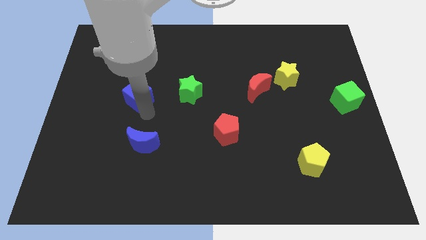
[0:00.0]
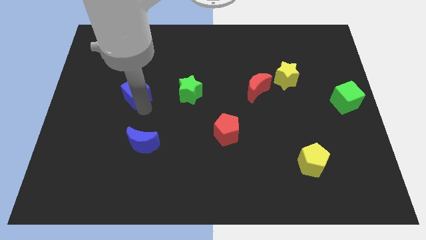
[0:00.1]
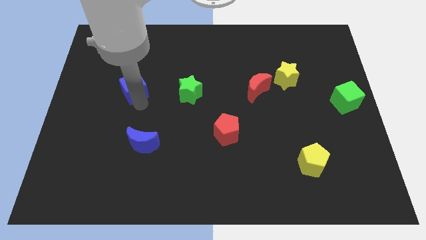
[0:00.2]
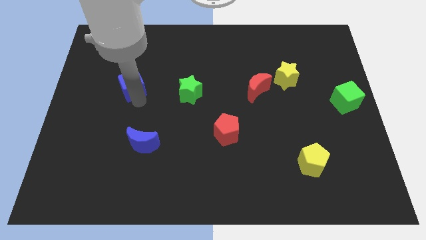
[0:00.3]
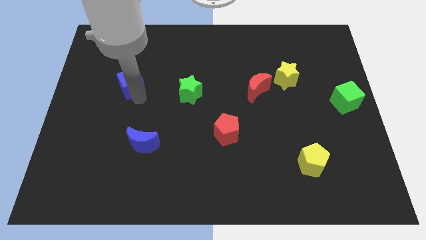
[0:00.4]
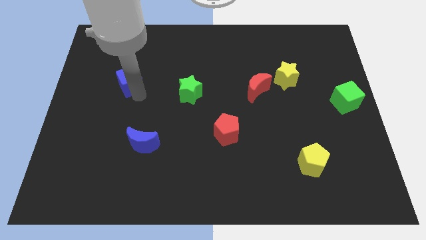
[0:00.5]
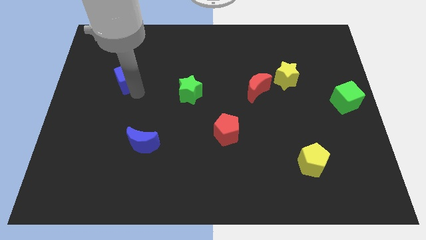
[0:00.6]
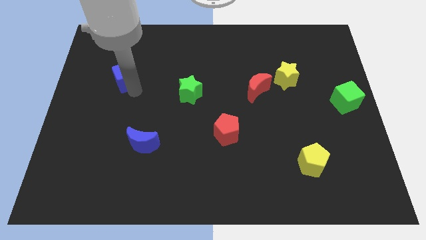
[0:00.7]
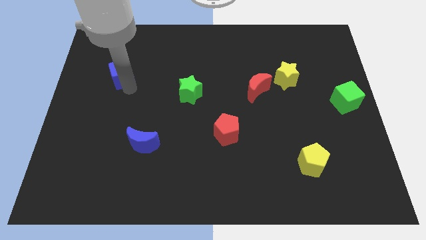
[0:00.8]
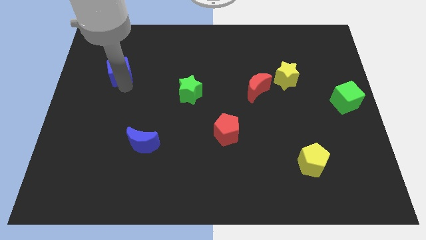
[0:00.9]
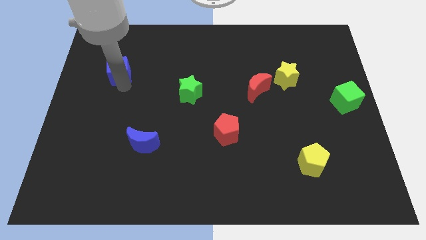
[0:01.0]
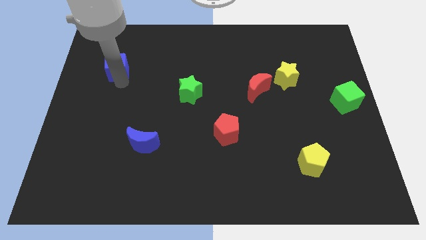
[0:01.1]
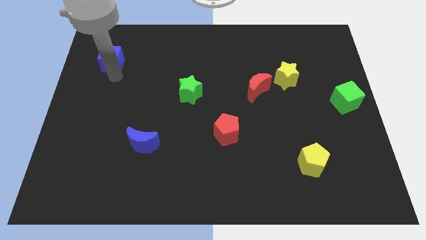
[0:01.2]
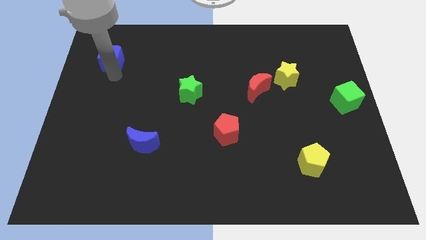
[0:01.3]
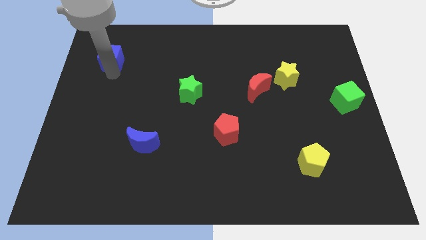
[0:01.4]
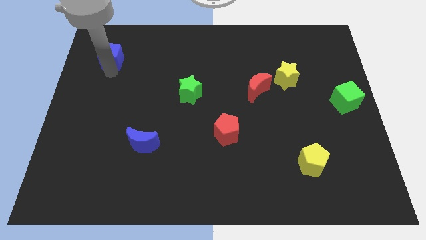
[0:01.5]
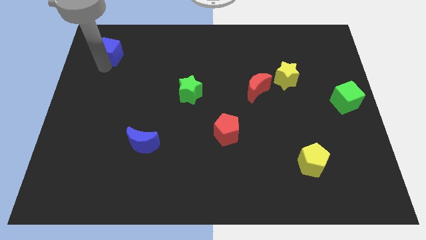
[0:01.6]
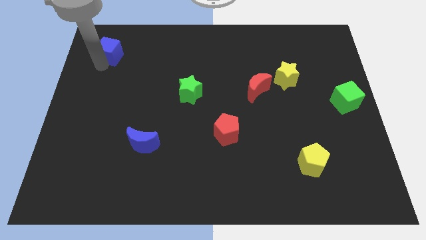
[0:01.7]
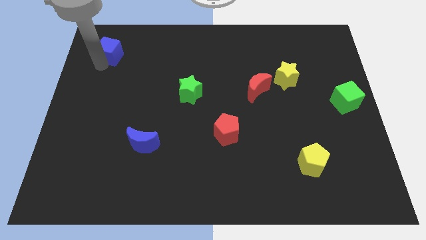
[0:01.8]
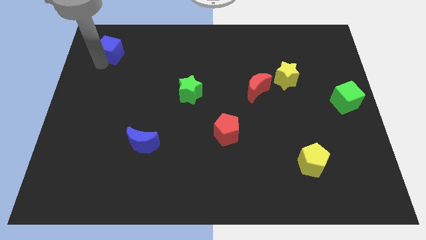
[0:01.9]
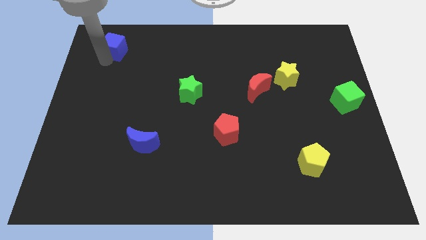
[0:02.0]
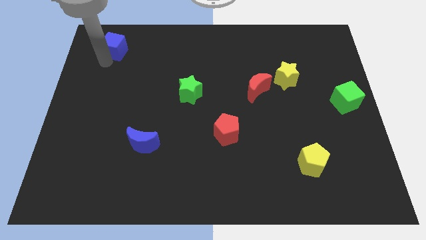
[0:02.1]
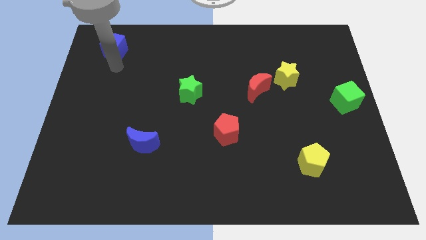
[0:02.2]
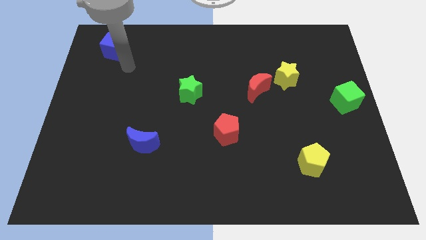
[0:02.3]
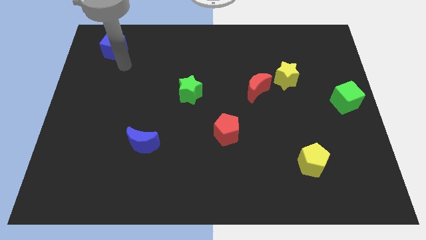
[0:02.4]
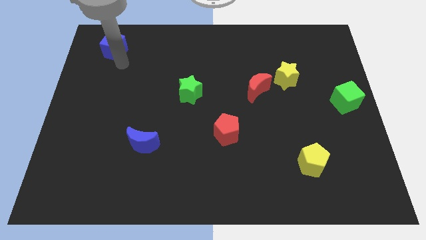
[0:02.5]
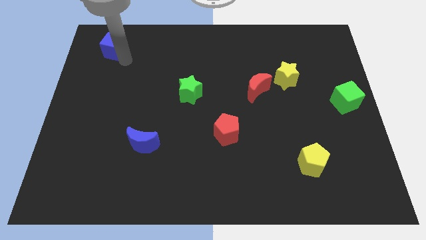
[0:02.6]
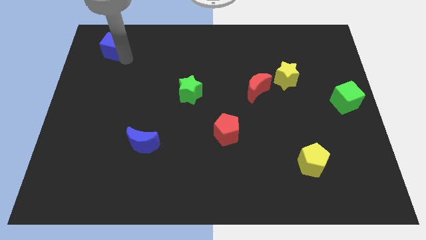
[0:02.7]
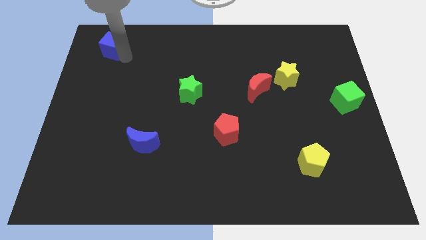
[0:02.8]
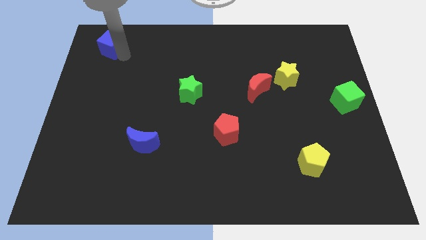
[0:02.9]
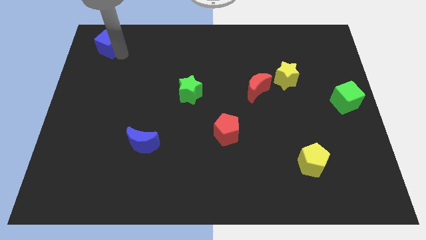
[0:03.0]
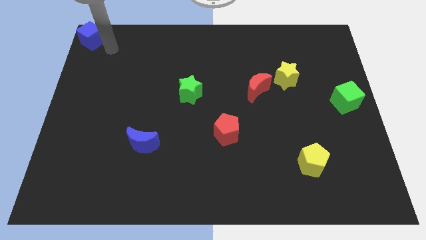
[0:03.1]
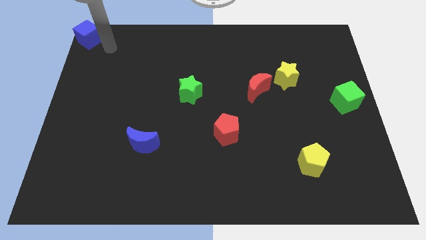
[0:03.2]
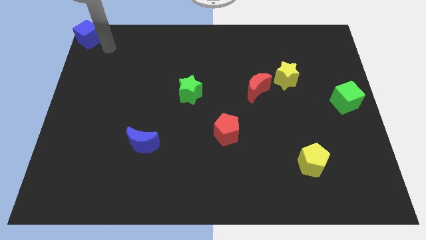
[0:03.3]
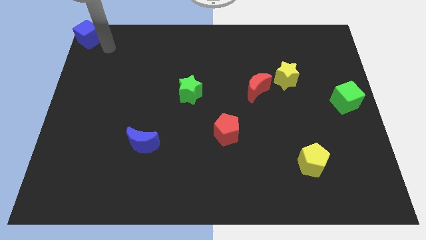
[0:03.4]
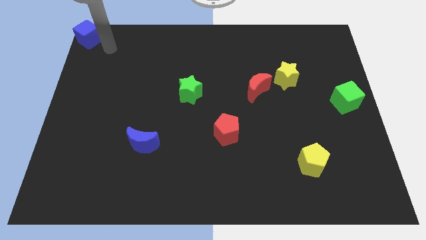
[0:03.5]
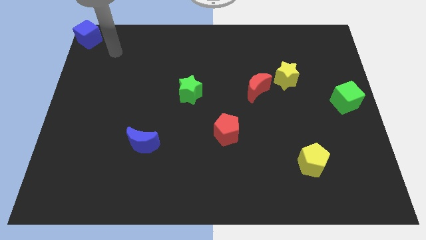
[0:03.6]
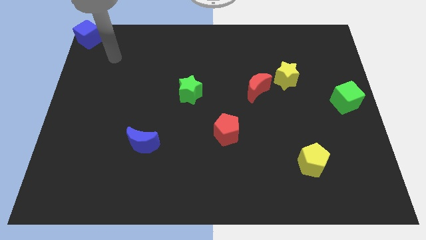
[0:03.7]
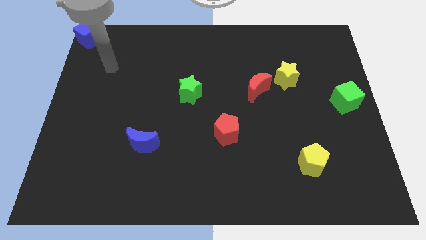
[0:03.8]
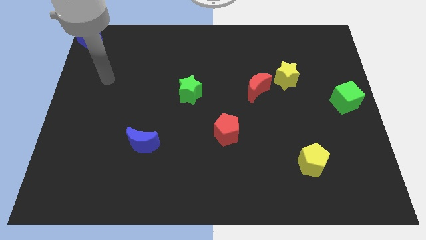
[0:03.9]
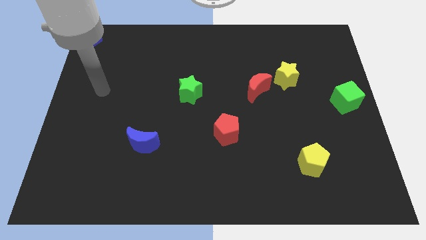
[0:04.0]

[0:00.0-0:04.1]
slide blue cube to the top left

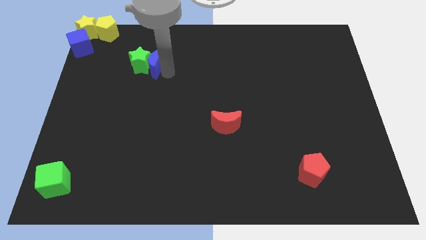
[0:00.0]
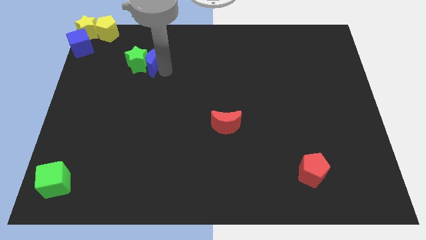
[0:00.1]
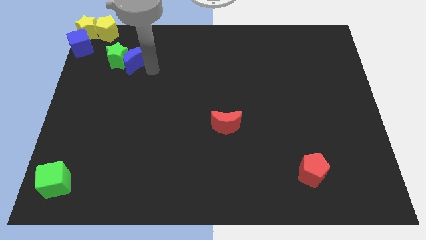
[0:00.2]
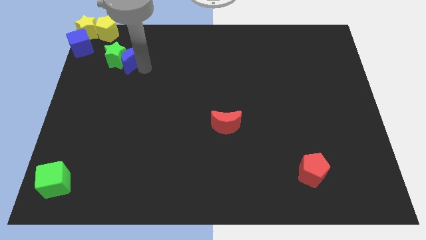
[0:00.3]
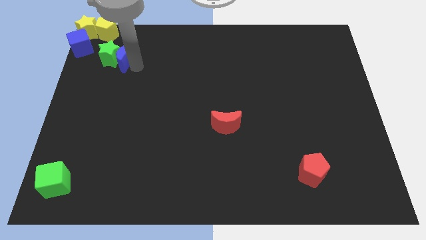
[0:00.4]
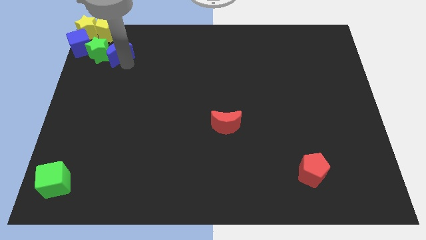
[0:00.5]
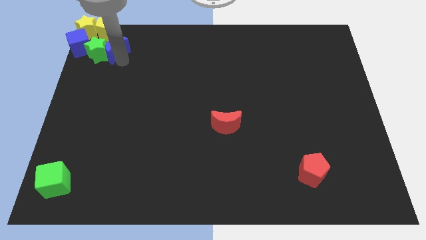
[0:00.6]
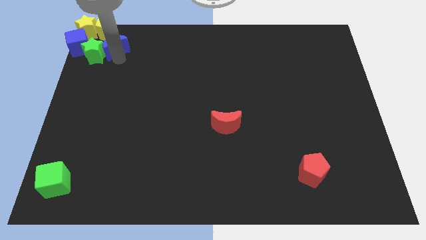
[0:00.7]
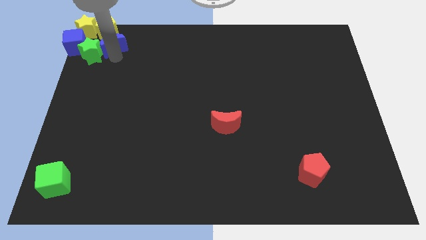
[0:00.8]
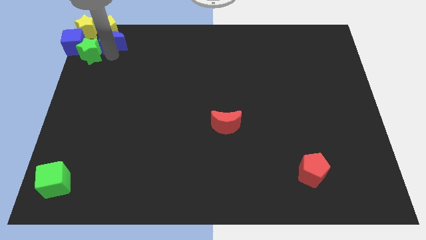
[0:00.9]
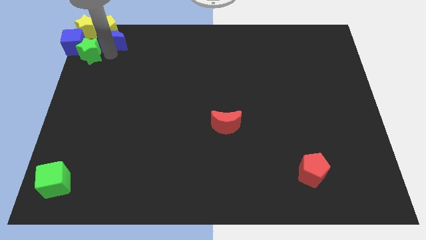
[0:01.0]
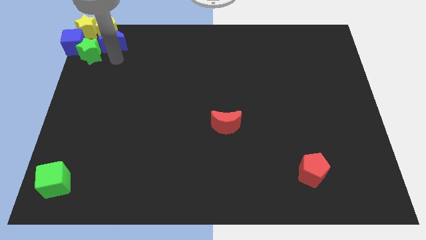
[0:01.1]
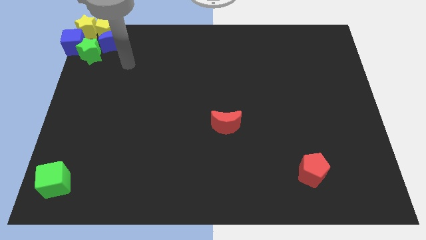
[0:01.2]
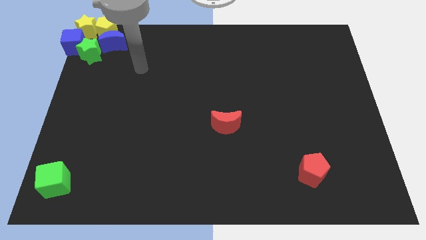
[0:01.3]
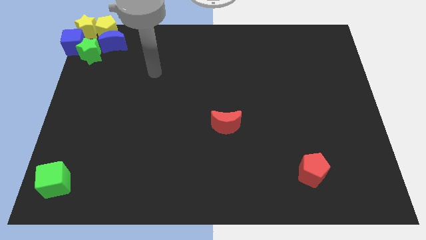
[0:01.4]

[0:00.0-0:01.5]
push the green star with blue crescent to the top left of the board

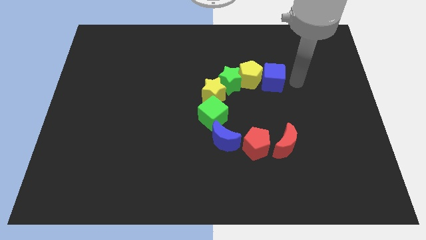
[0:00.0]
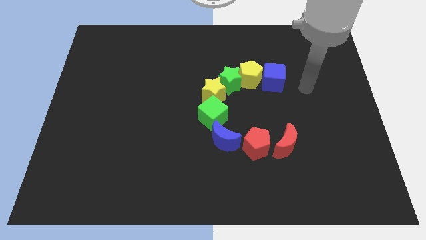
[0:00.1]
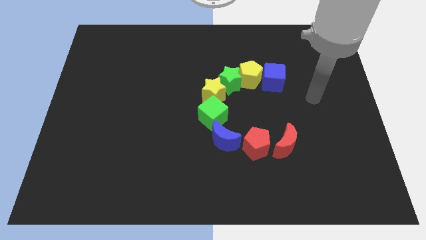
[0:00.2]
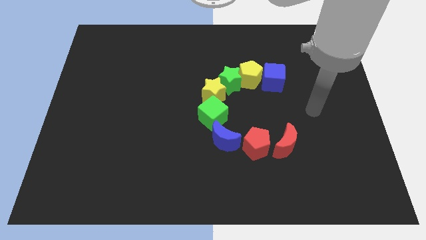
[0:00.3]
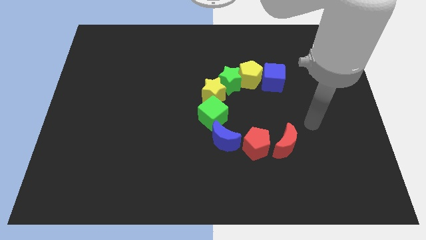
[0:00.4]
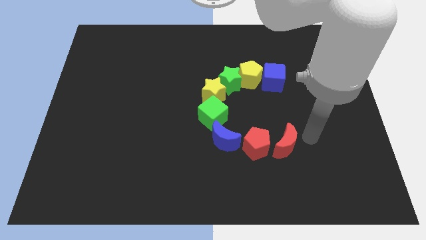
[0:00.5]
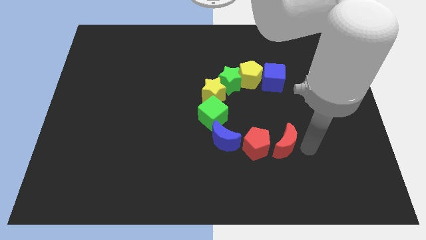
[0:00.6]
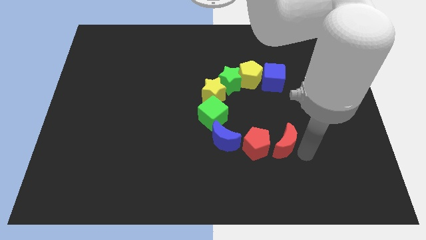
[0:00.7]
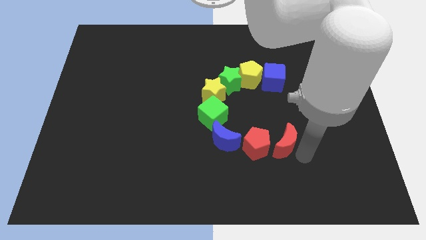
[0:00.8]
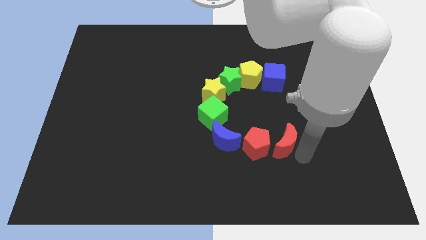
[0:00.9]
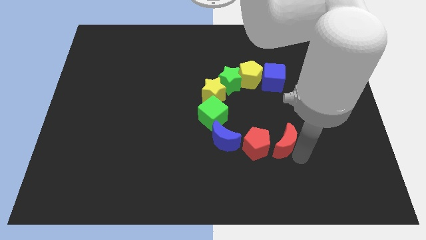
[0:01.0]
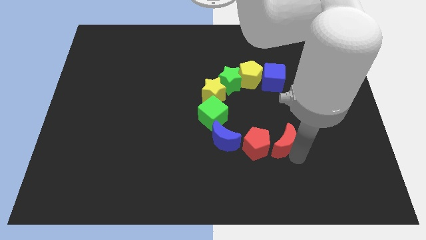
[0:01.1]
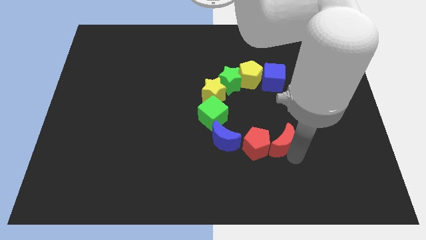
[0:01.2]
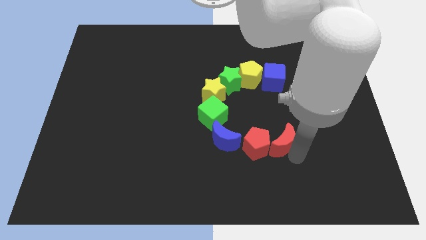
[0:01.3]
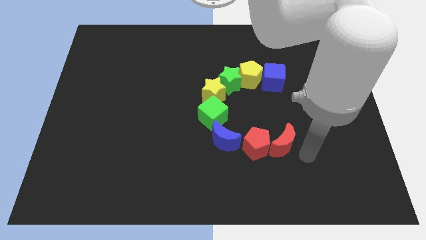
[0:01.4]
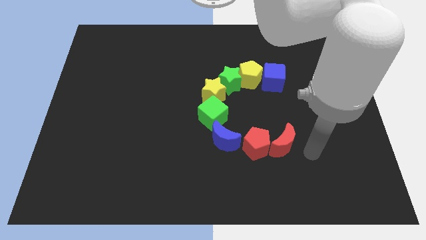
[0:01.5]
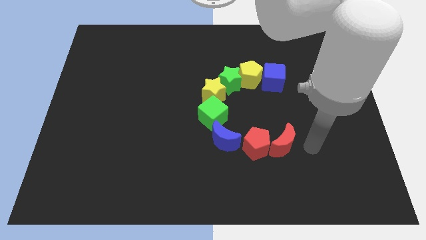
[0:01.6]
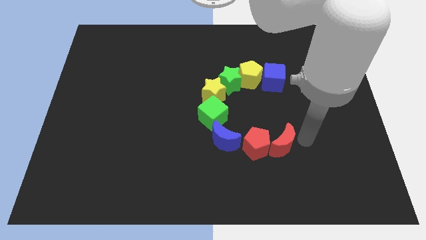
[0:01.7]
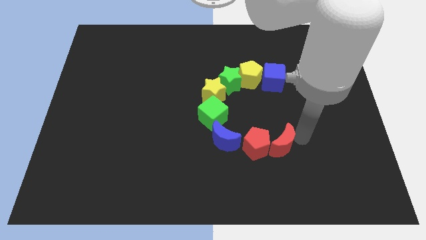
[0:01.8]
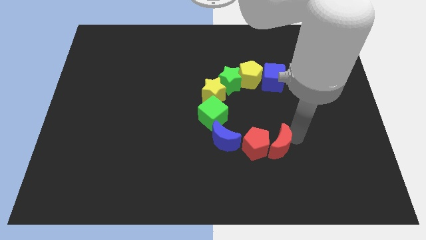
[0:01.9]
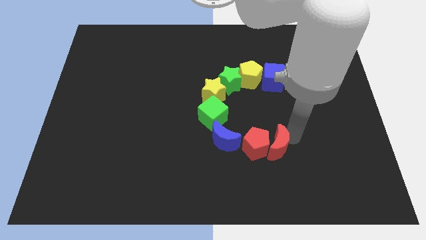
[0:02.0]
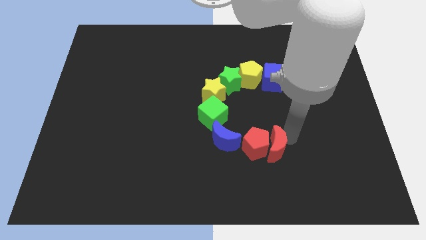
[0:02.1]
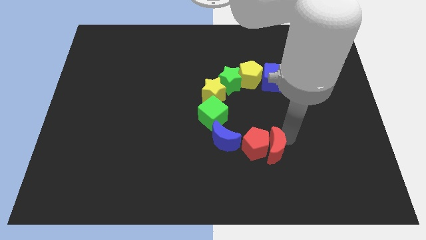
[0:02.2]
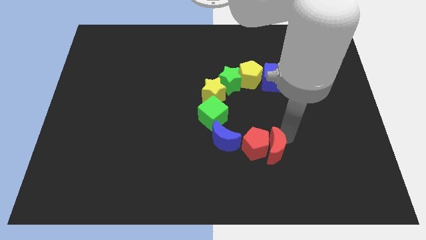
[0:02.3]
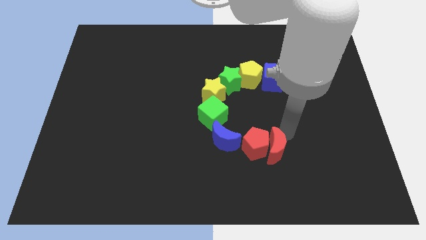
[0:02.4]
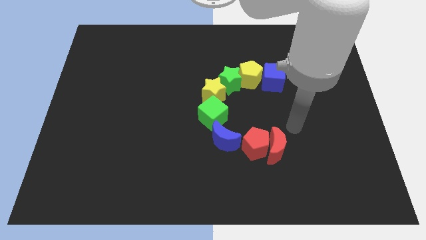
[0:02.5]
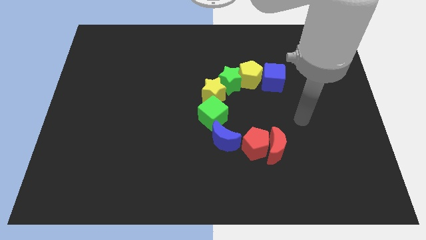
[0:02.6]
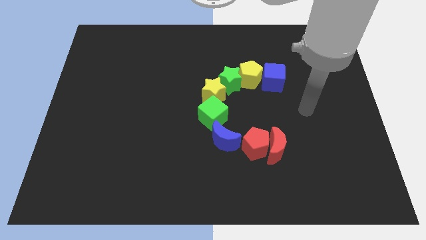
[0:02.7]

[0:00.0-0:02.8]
move the red crescent into the red pentagon

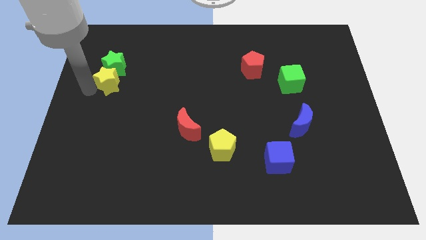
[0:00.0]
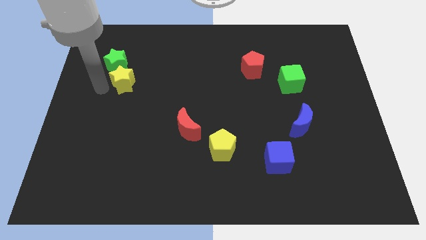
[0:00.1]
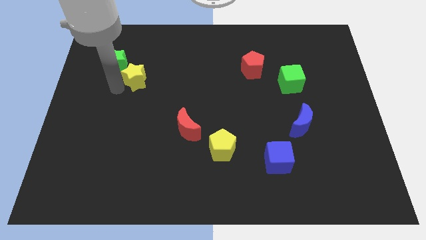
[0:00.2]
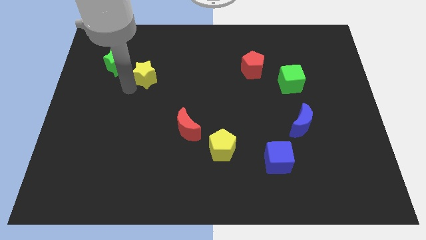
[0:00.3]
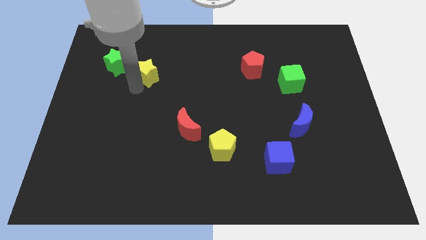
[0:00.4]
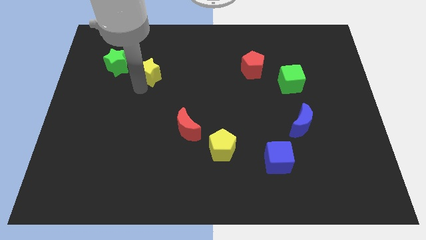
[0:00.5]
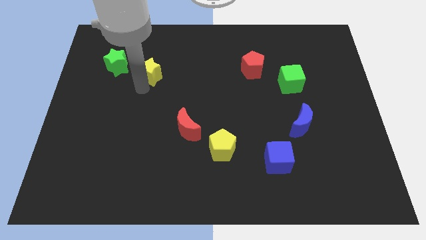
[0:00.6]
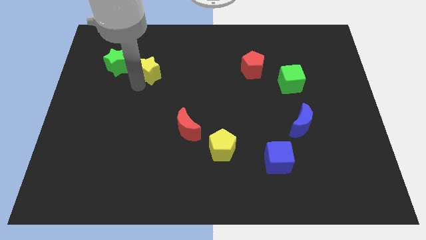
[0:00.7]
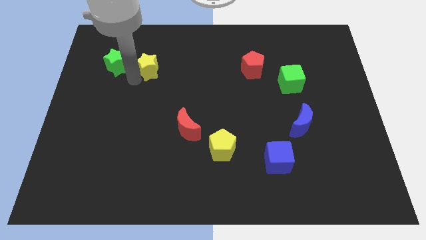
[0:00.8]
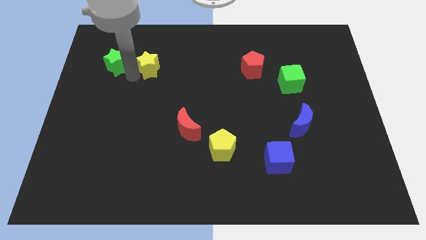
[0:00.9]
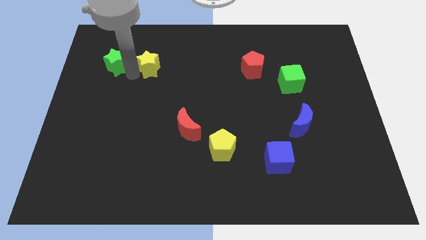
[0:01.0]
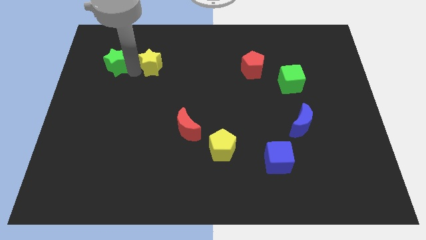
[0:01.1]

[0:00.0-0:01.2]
separate yellow star from the bottom side of the green star
